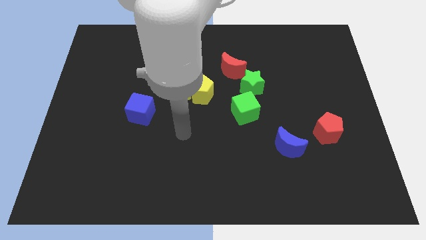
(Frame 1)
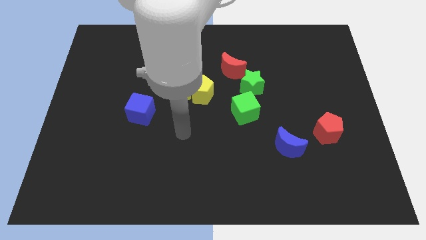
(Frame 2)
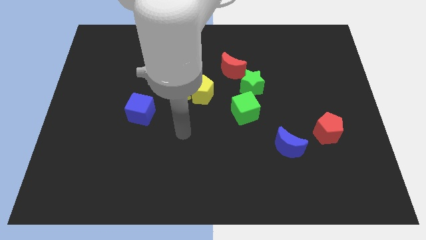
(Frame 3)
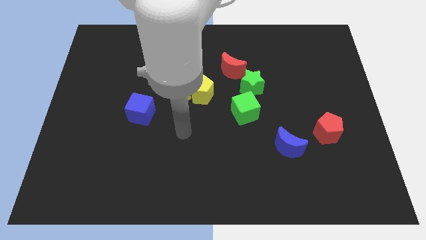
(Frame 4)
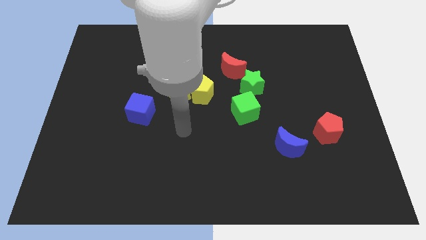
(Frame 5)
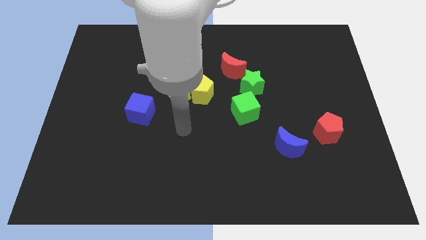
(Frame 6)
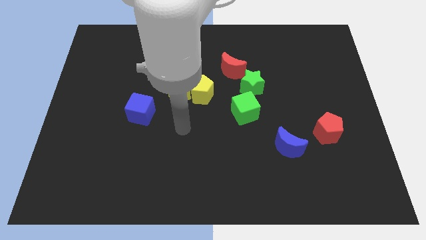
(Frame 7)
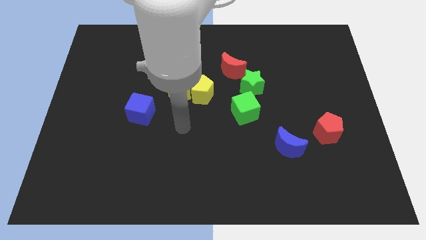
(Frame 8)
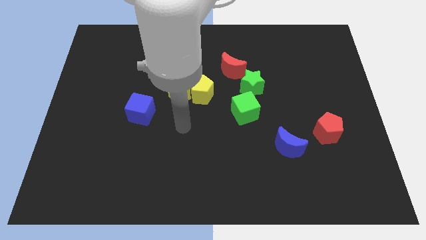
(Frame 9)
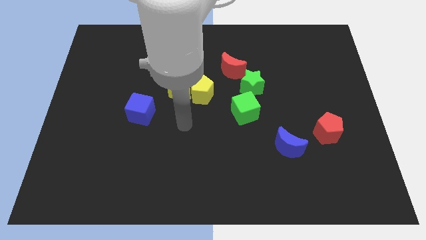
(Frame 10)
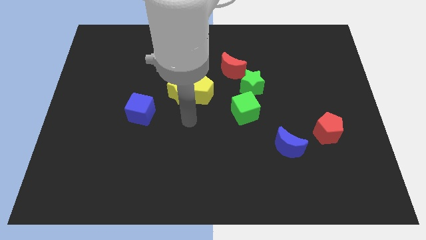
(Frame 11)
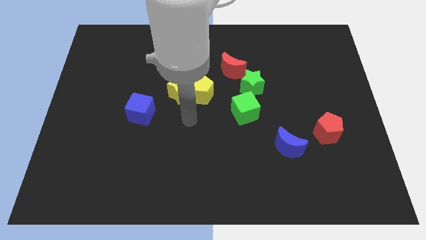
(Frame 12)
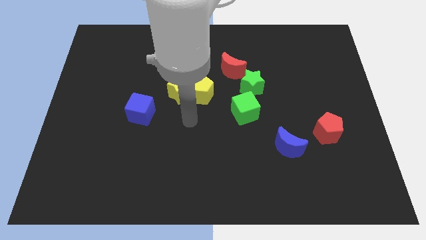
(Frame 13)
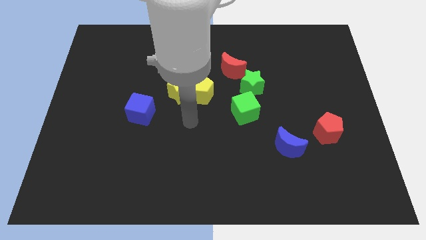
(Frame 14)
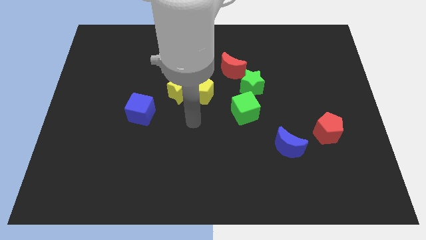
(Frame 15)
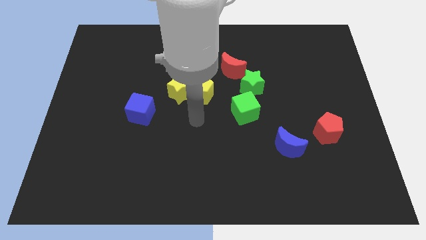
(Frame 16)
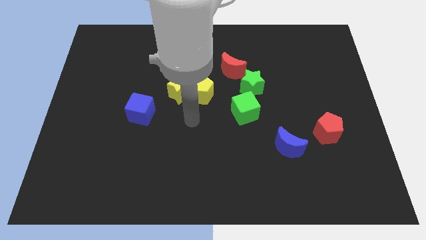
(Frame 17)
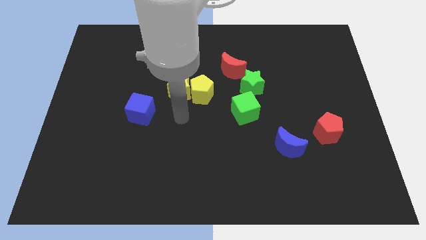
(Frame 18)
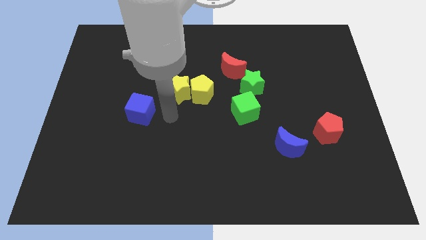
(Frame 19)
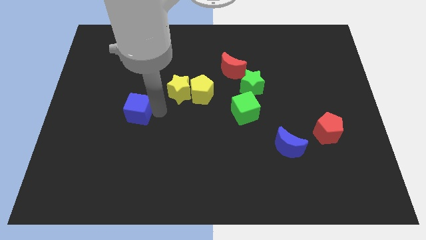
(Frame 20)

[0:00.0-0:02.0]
point your arm to the right side of blue cube

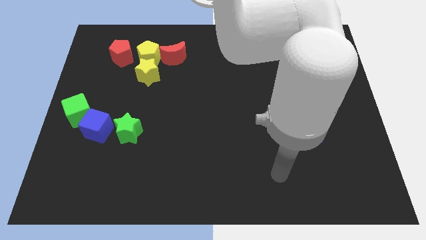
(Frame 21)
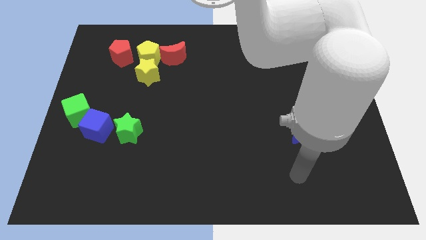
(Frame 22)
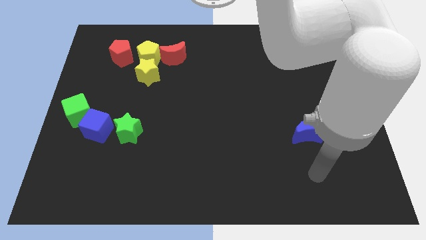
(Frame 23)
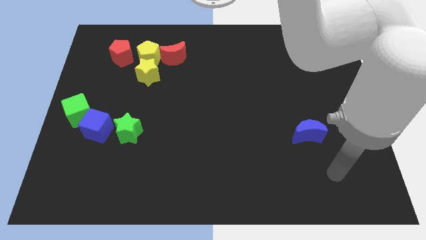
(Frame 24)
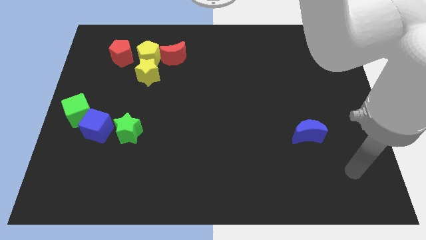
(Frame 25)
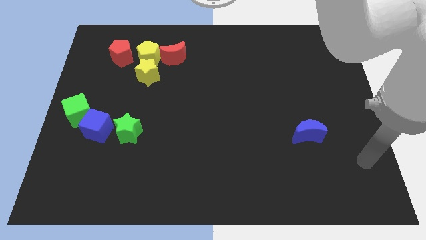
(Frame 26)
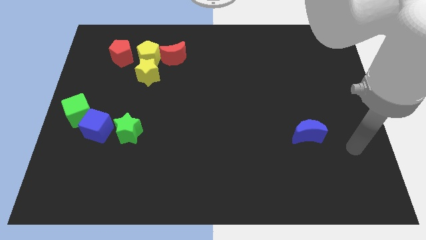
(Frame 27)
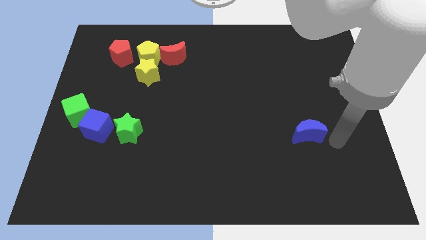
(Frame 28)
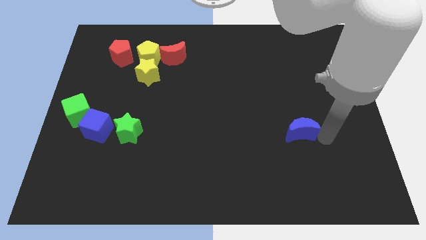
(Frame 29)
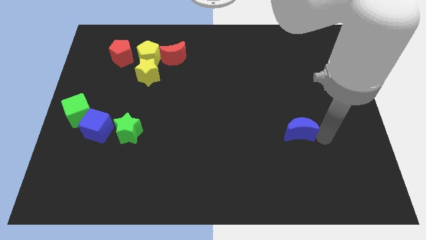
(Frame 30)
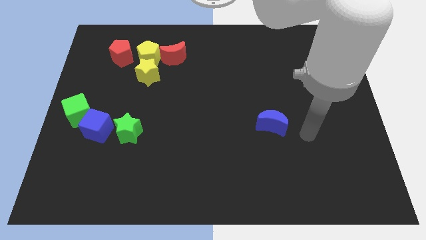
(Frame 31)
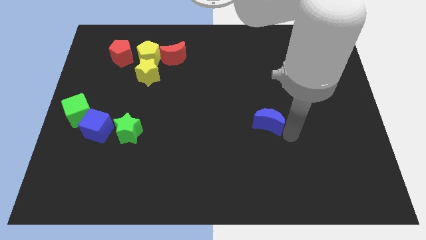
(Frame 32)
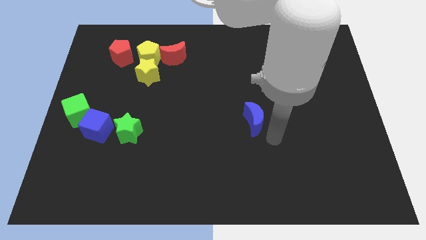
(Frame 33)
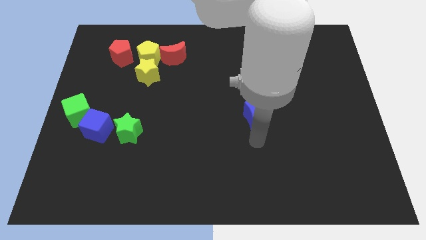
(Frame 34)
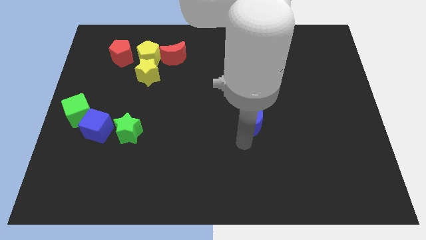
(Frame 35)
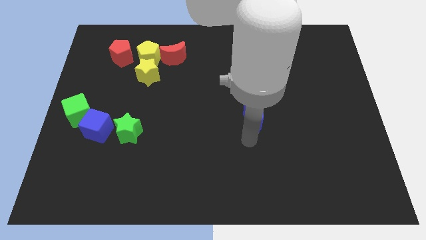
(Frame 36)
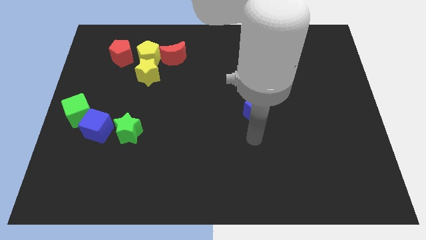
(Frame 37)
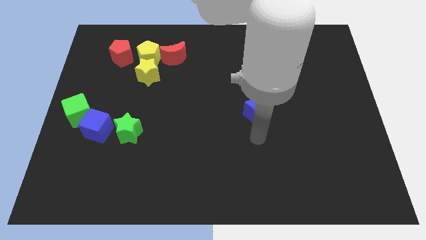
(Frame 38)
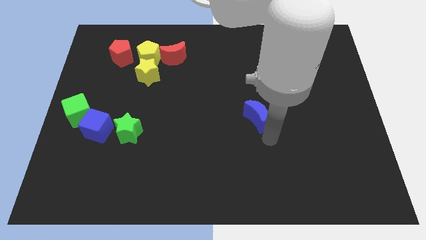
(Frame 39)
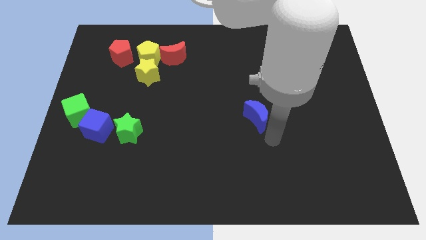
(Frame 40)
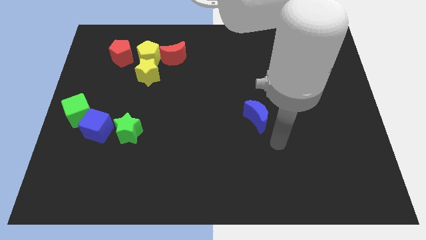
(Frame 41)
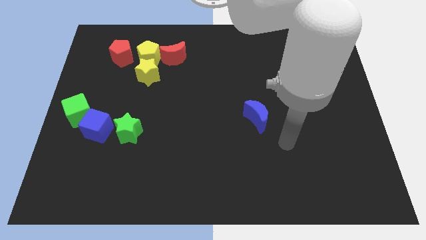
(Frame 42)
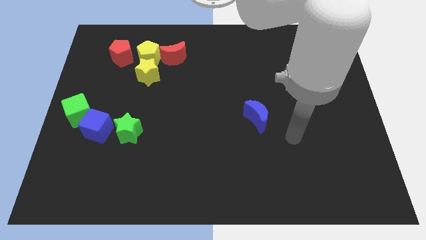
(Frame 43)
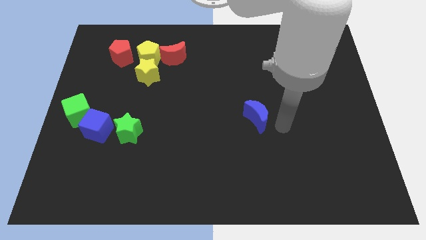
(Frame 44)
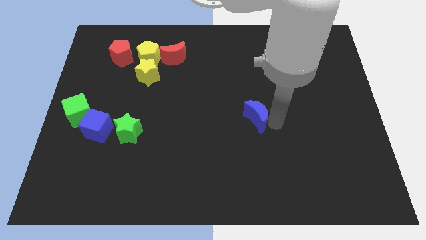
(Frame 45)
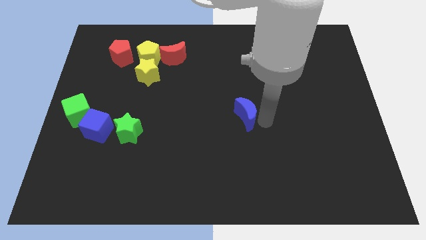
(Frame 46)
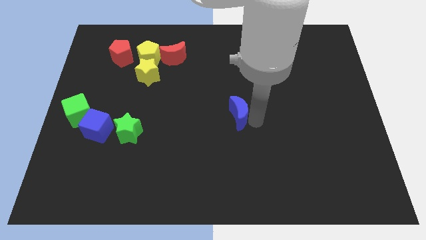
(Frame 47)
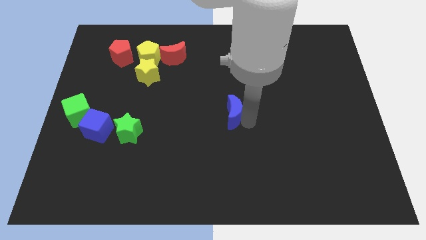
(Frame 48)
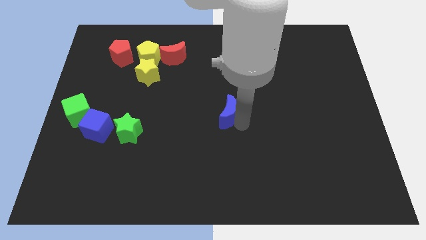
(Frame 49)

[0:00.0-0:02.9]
place the blue moon to the middle of the board

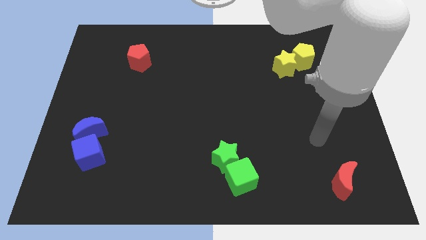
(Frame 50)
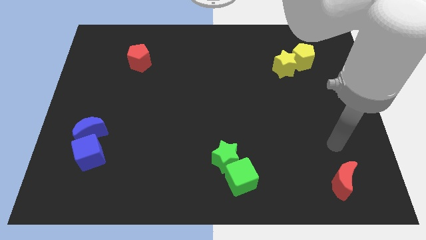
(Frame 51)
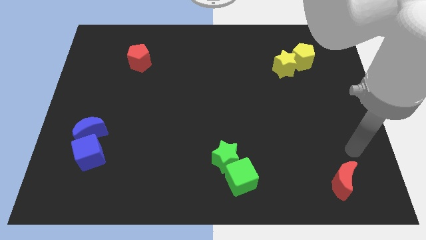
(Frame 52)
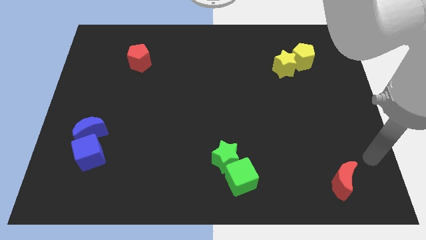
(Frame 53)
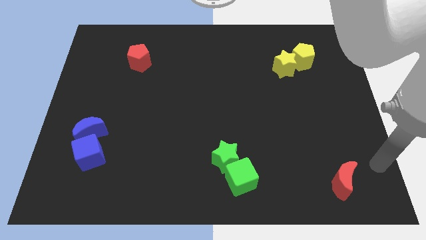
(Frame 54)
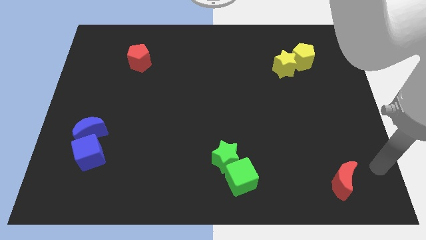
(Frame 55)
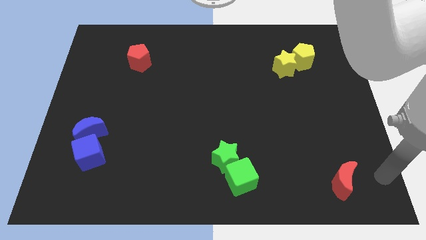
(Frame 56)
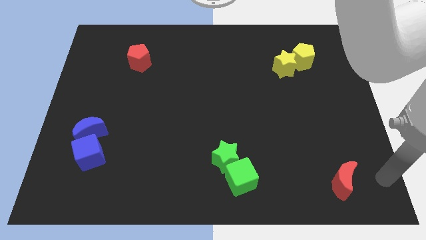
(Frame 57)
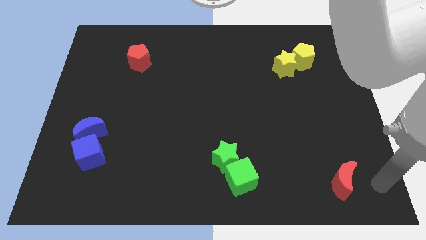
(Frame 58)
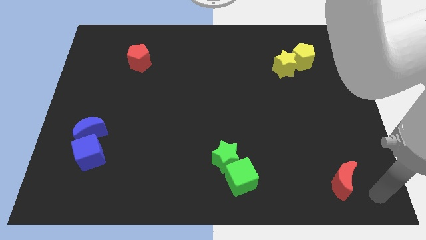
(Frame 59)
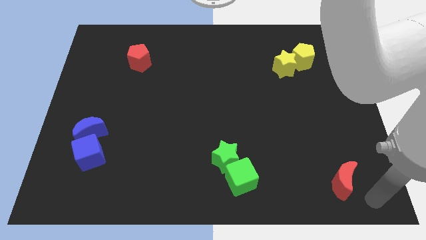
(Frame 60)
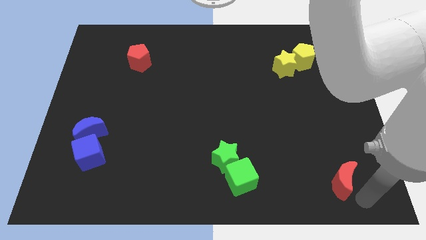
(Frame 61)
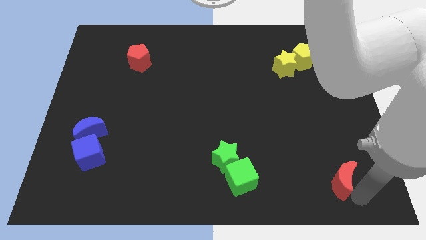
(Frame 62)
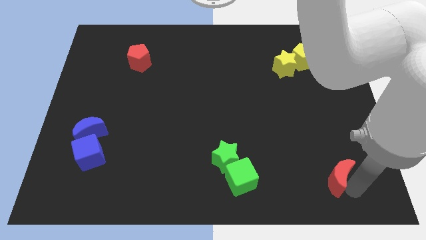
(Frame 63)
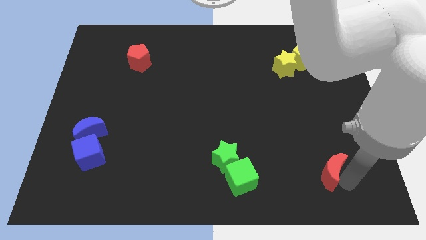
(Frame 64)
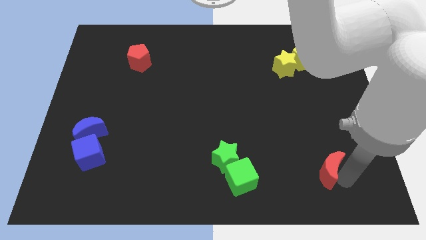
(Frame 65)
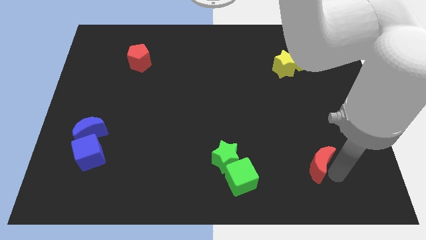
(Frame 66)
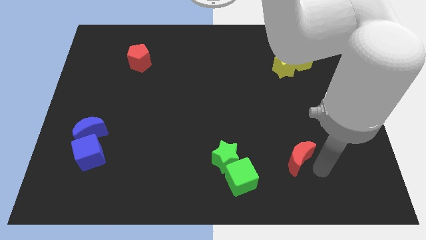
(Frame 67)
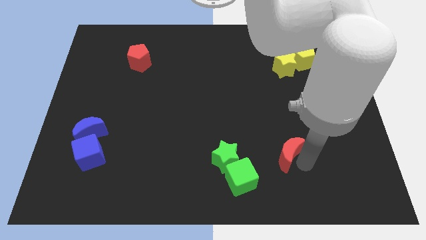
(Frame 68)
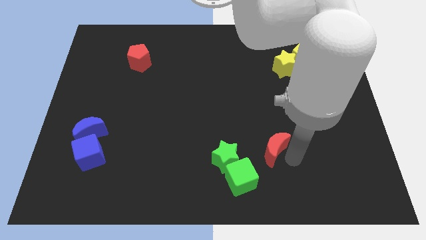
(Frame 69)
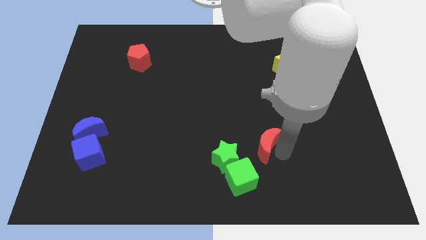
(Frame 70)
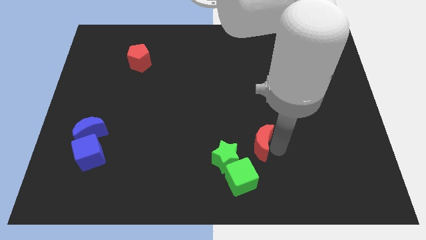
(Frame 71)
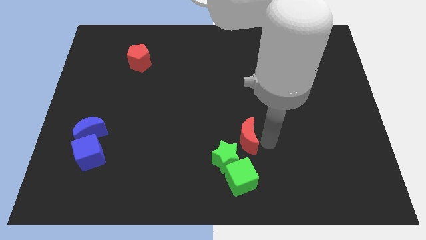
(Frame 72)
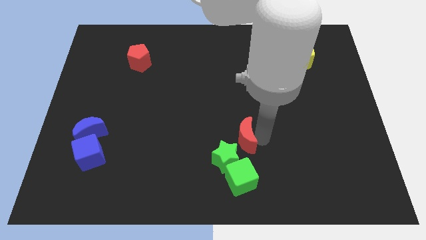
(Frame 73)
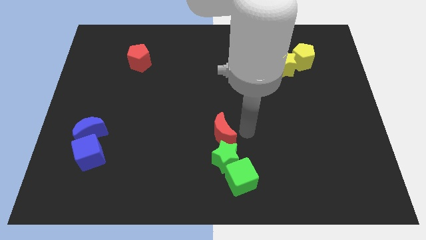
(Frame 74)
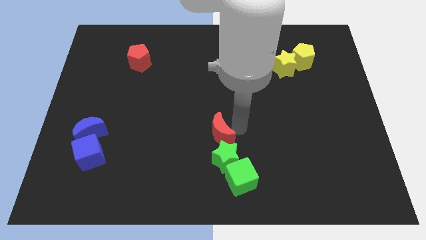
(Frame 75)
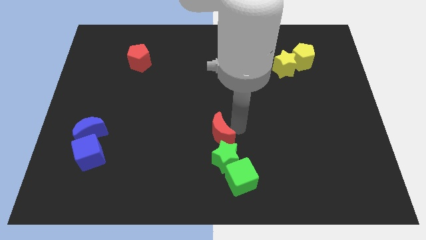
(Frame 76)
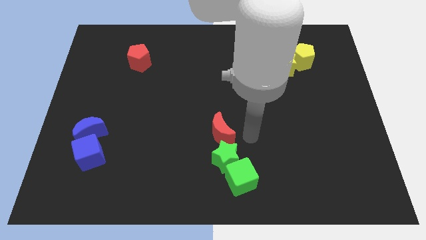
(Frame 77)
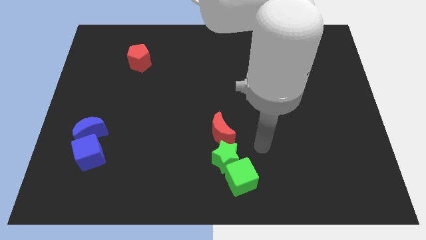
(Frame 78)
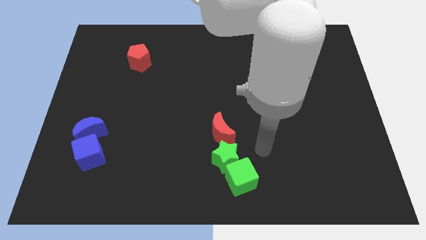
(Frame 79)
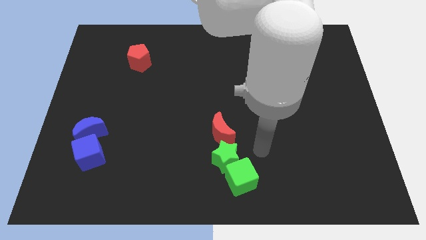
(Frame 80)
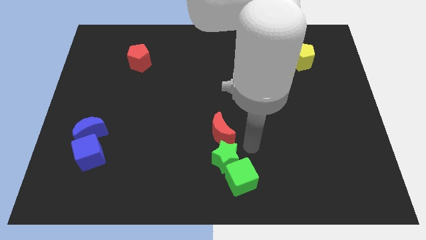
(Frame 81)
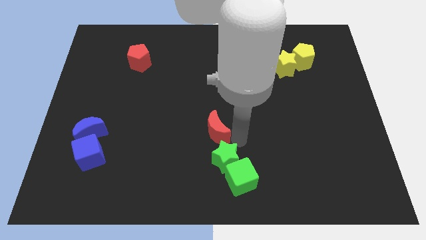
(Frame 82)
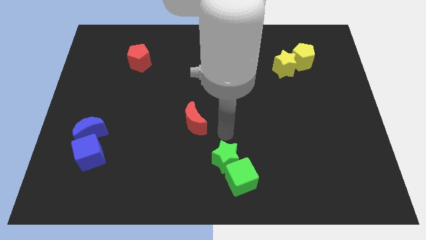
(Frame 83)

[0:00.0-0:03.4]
place the red crescent diagonal bottom left to the yellow blocks

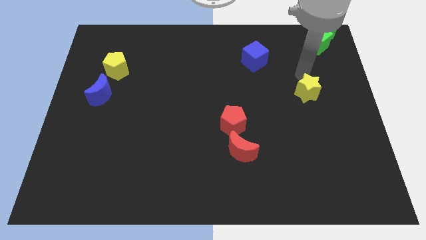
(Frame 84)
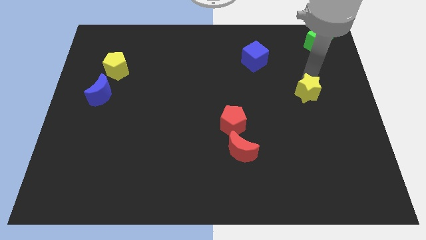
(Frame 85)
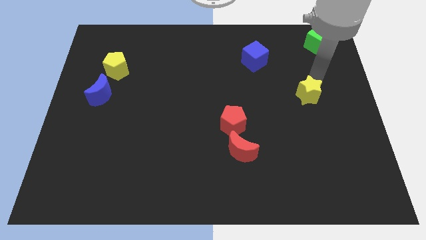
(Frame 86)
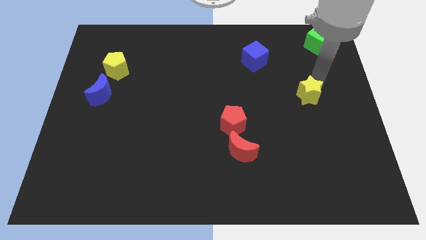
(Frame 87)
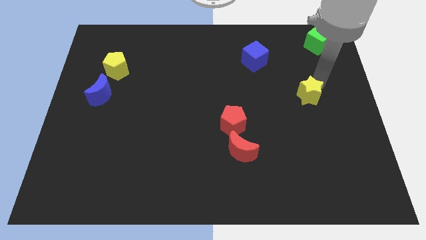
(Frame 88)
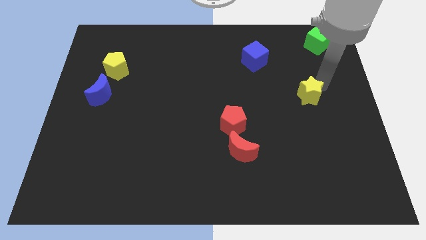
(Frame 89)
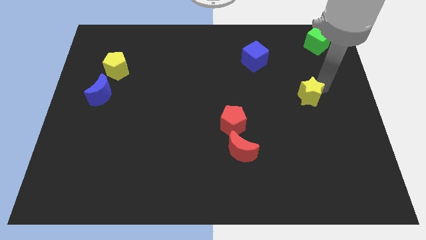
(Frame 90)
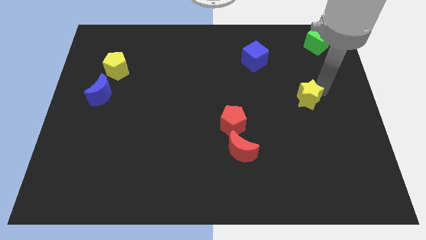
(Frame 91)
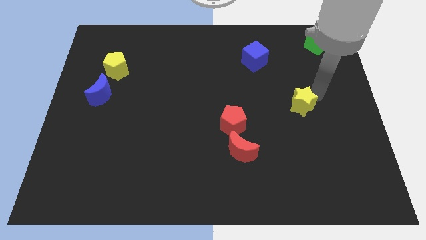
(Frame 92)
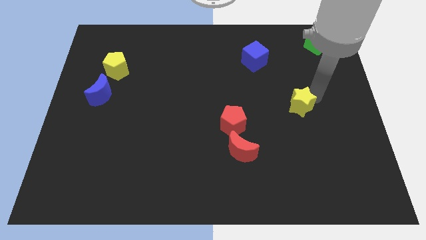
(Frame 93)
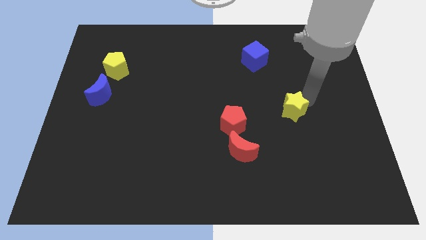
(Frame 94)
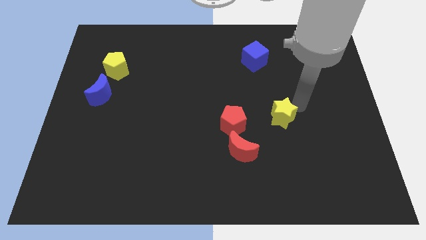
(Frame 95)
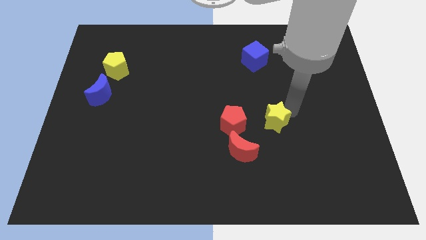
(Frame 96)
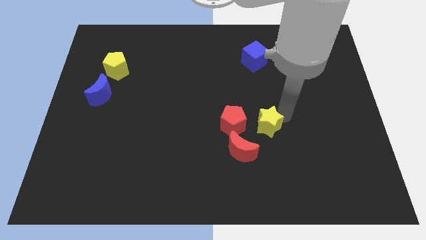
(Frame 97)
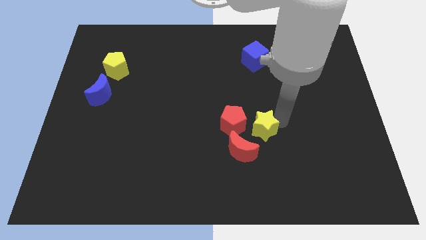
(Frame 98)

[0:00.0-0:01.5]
move the yellow star to the right of the red pentagon
